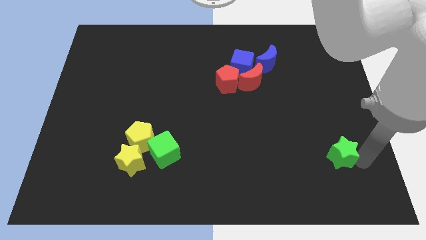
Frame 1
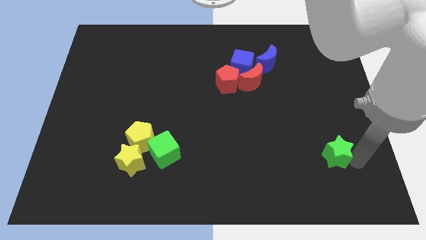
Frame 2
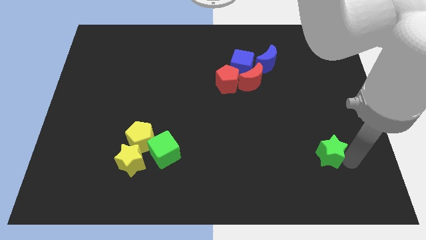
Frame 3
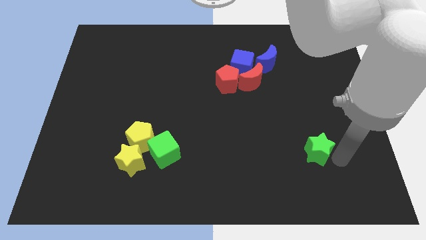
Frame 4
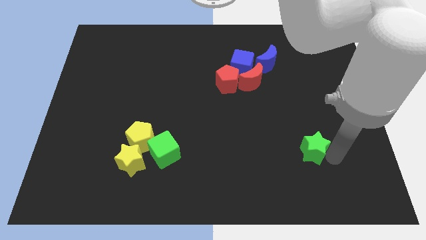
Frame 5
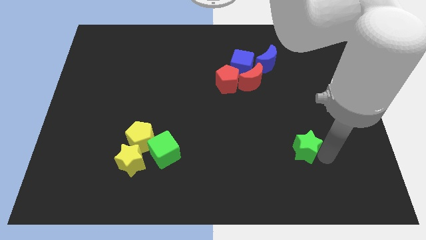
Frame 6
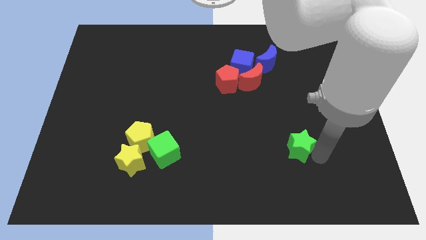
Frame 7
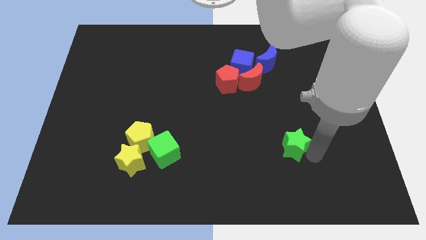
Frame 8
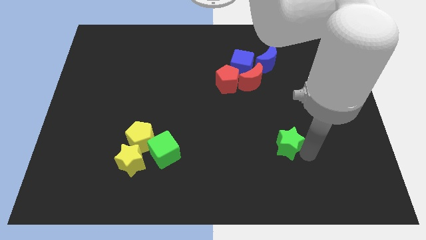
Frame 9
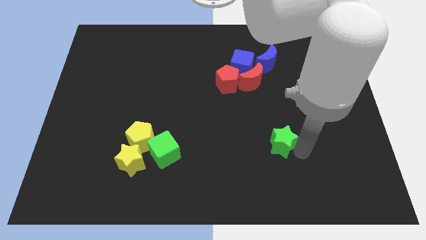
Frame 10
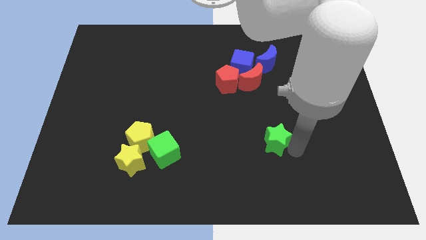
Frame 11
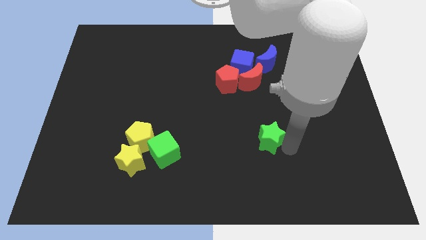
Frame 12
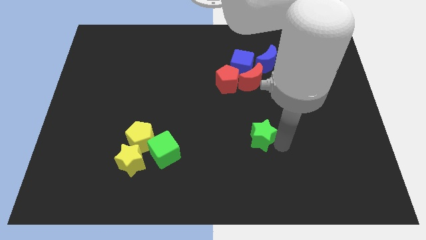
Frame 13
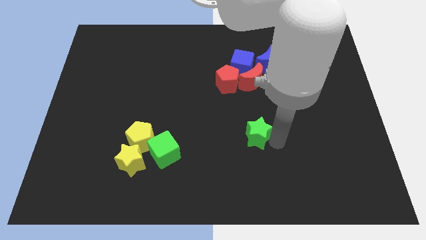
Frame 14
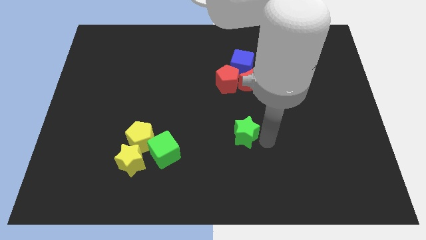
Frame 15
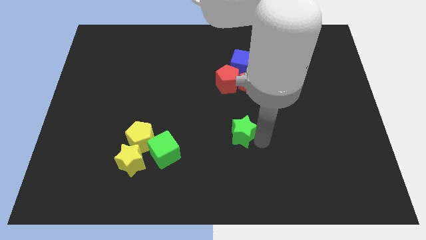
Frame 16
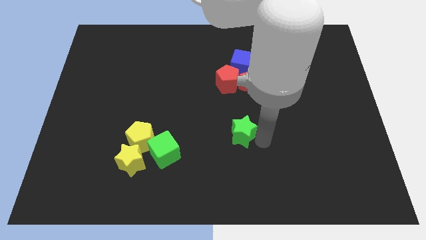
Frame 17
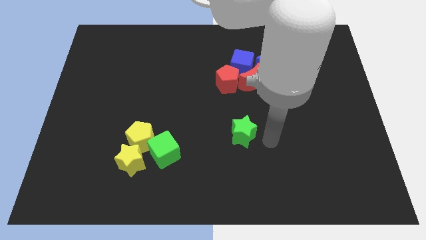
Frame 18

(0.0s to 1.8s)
move green star to the middle of the board

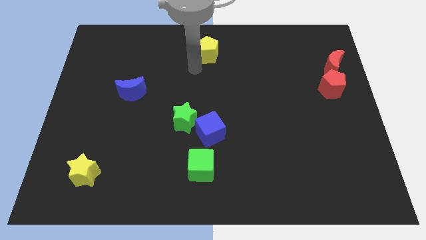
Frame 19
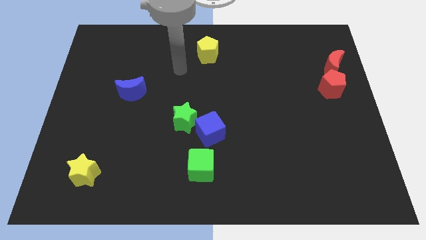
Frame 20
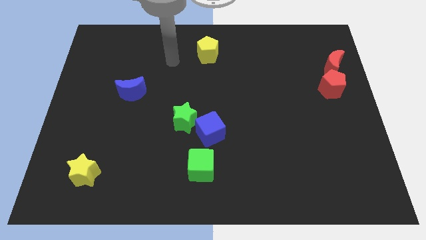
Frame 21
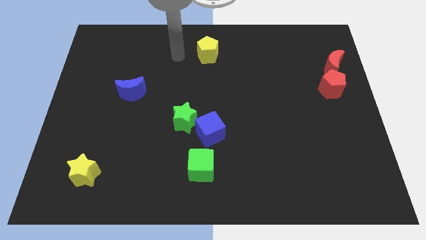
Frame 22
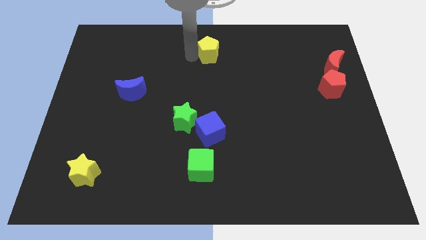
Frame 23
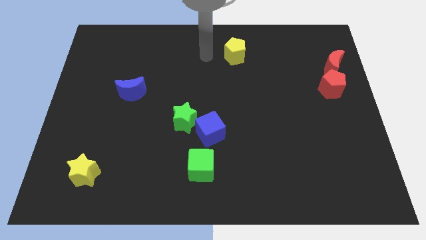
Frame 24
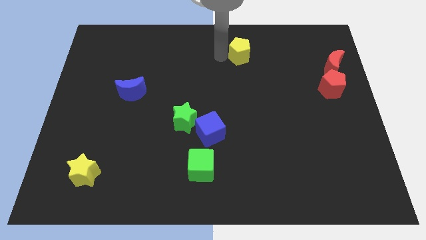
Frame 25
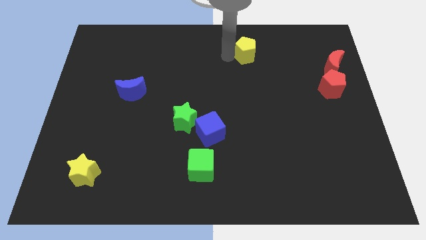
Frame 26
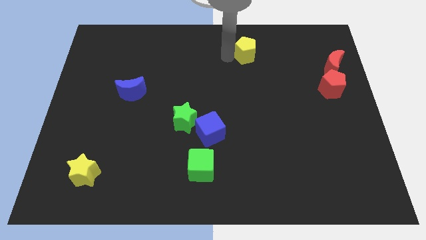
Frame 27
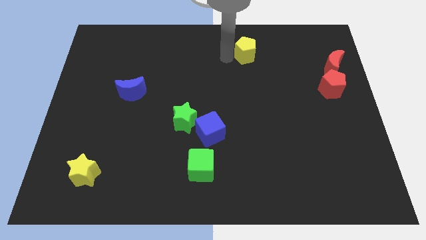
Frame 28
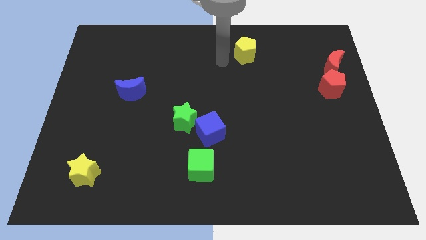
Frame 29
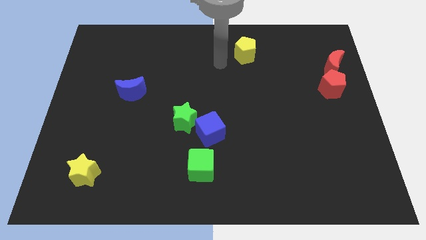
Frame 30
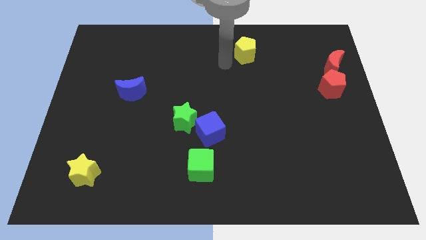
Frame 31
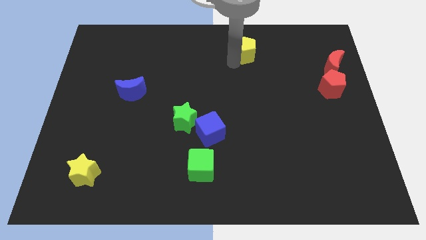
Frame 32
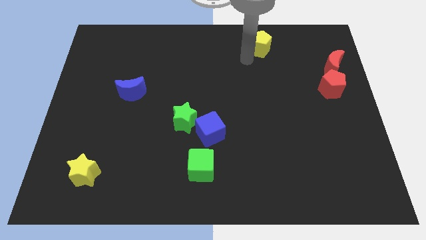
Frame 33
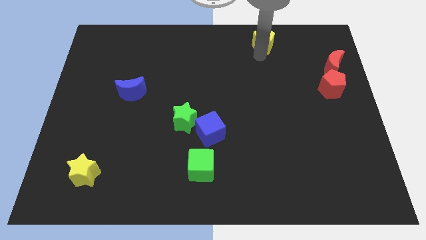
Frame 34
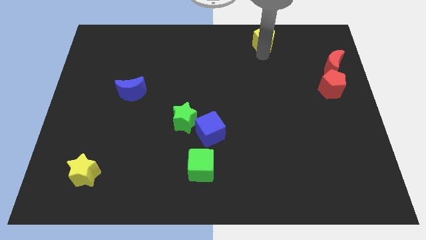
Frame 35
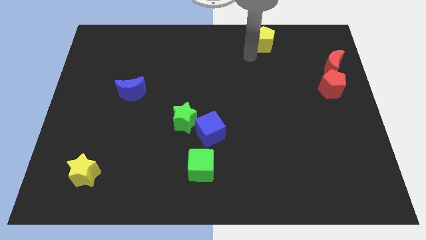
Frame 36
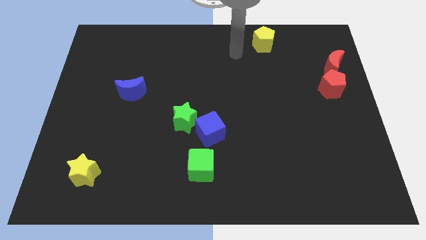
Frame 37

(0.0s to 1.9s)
drag yellow pentagon diagonally top right to the blue cube

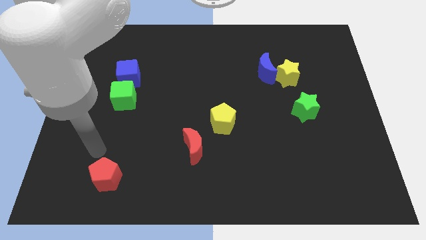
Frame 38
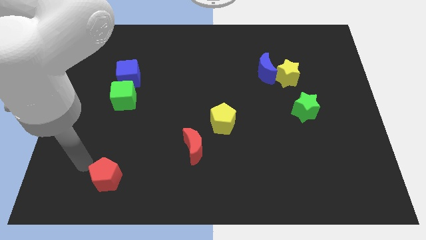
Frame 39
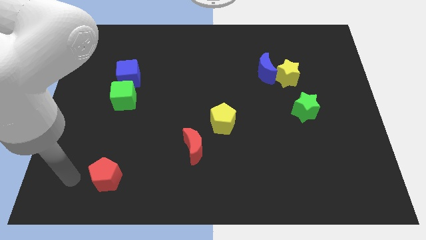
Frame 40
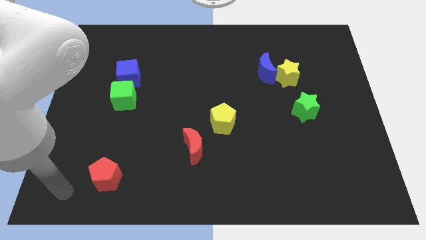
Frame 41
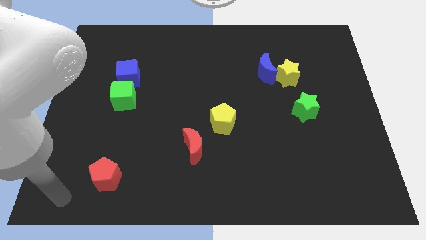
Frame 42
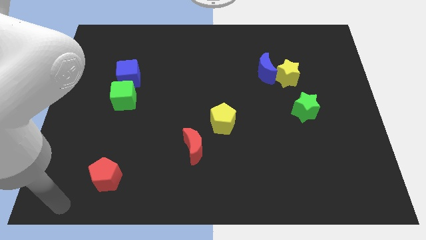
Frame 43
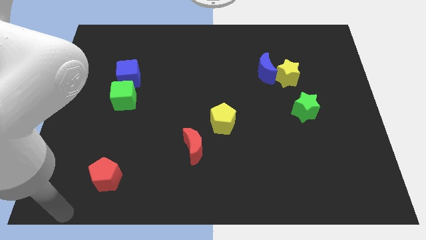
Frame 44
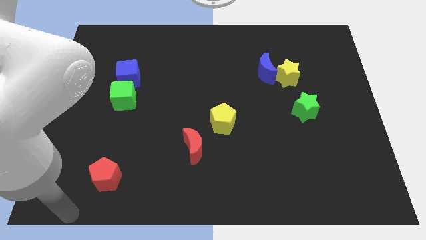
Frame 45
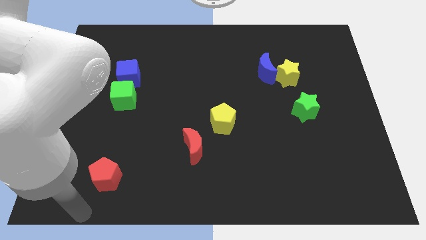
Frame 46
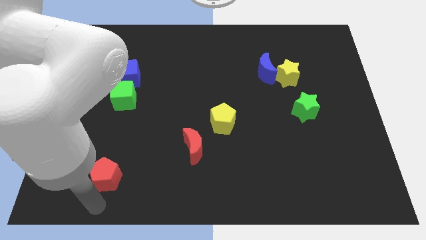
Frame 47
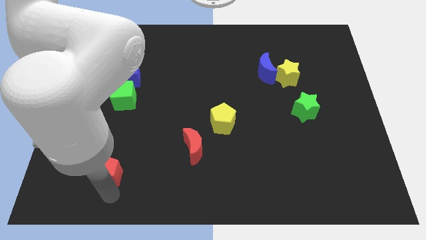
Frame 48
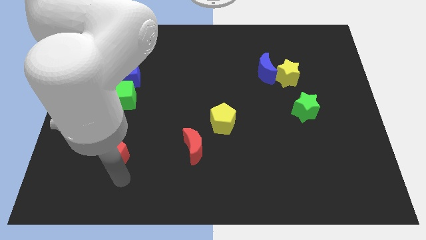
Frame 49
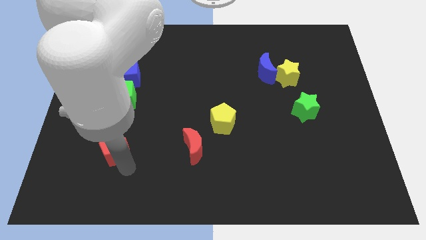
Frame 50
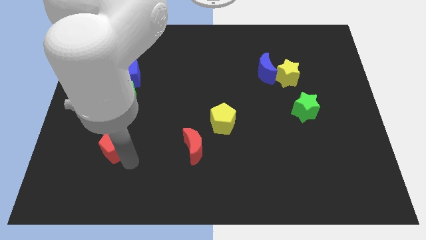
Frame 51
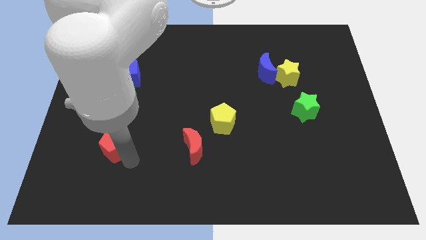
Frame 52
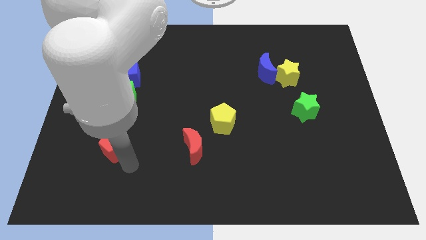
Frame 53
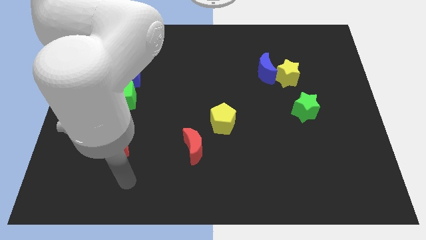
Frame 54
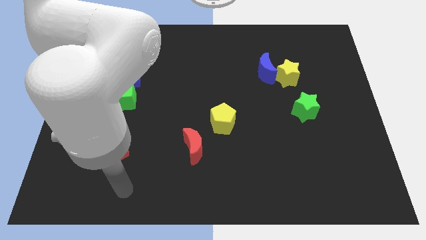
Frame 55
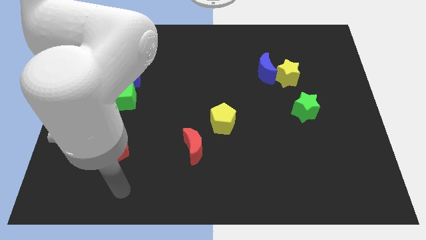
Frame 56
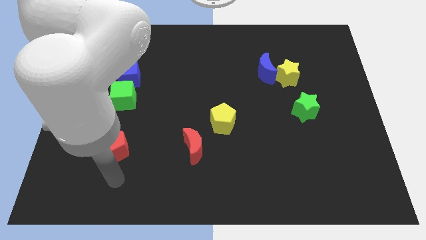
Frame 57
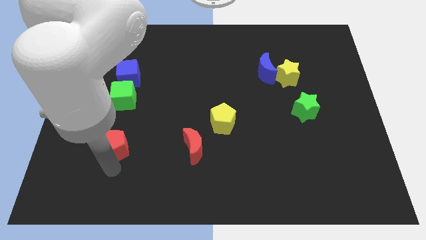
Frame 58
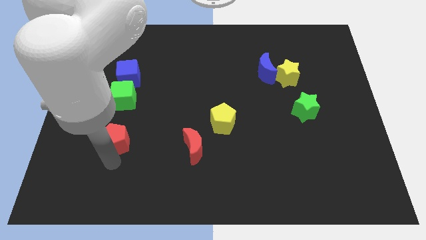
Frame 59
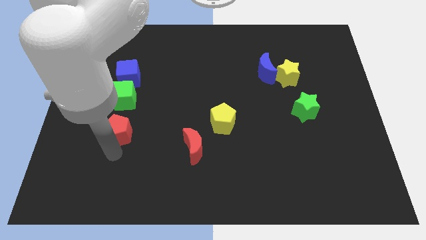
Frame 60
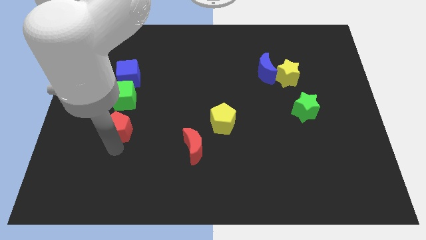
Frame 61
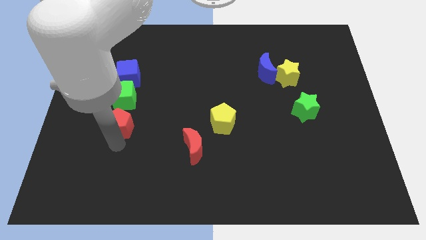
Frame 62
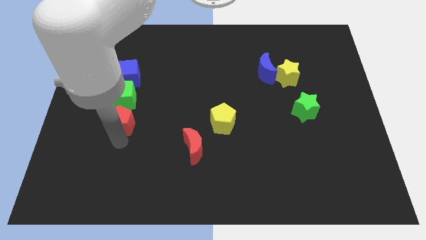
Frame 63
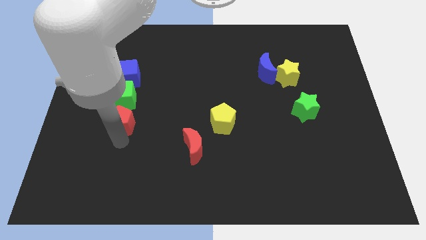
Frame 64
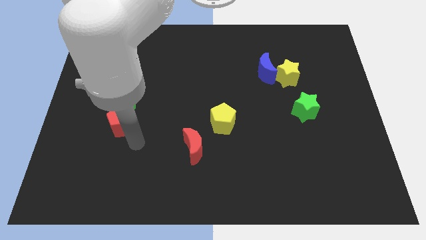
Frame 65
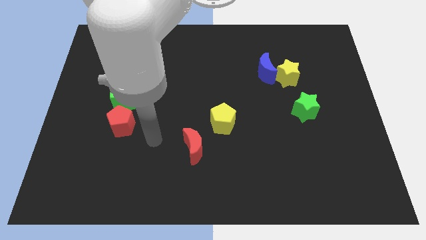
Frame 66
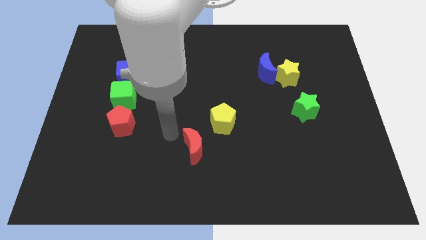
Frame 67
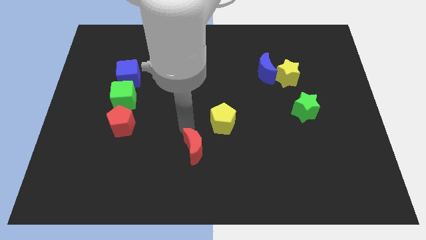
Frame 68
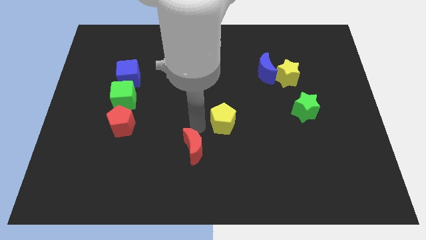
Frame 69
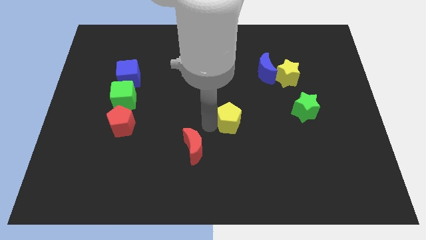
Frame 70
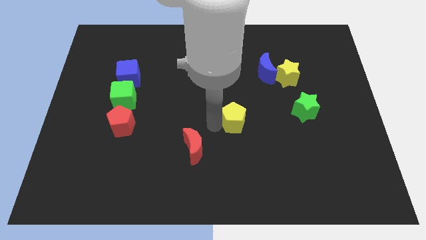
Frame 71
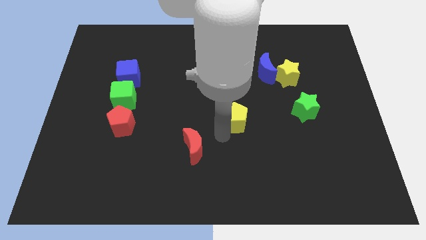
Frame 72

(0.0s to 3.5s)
move the red pentagon below the green cube

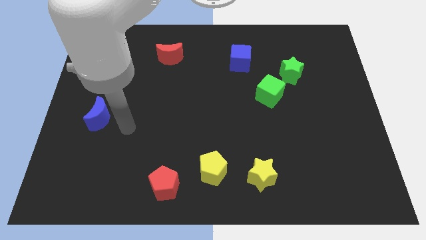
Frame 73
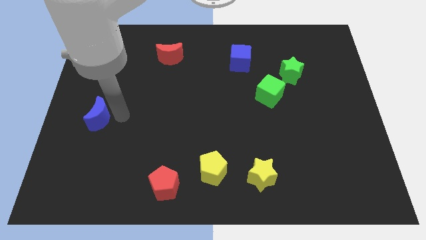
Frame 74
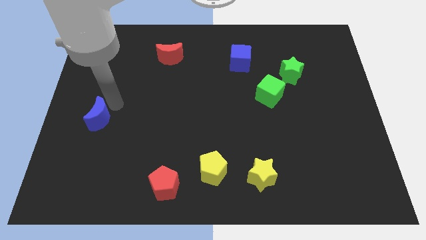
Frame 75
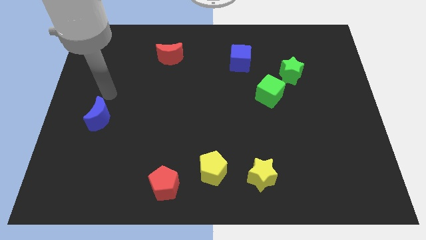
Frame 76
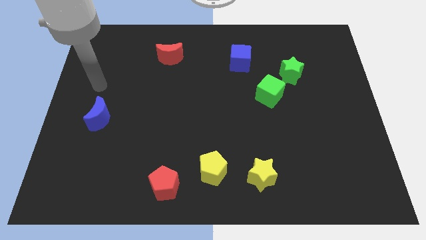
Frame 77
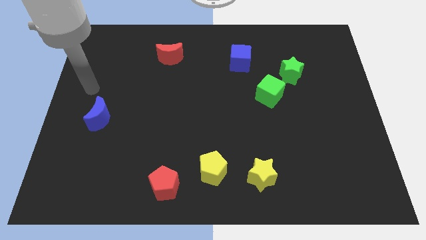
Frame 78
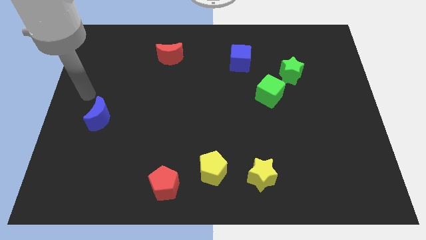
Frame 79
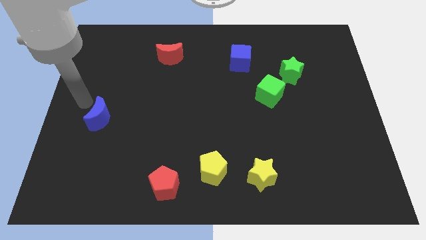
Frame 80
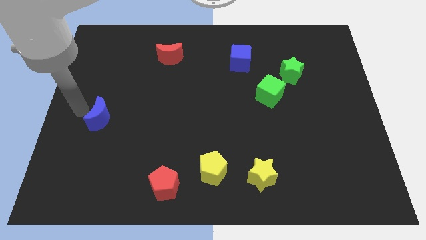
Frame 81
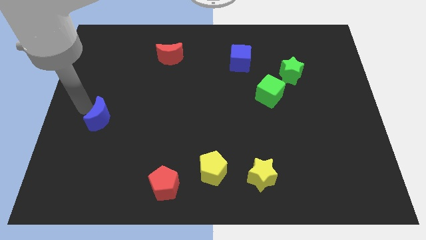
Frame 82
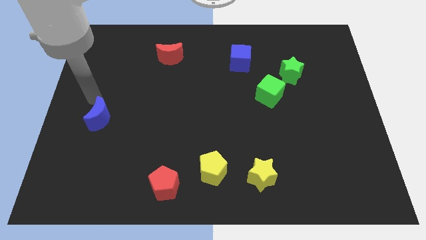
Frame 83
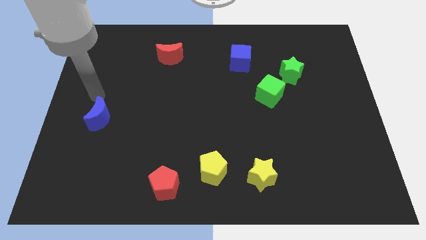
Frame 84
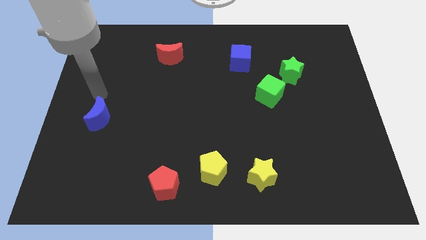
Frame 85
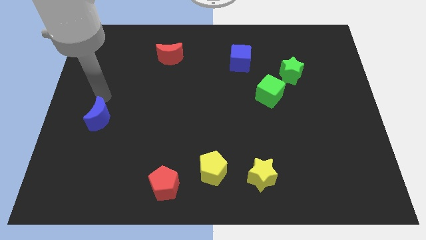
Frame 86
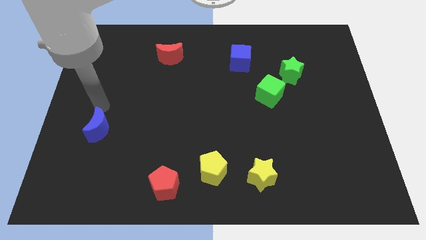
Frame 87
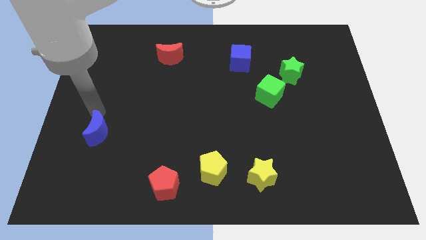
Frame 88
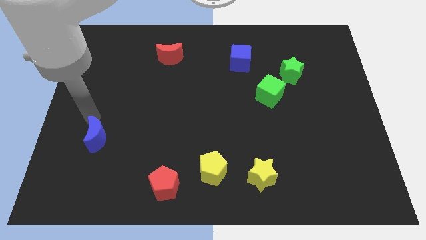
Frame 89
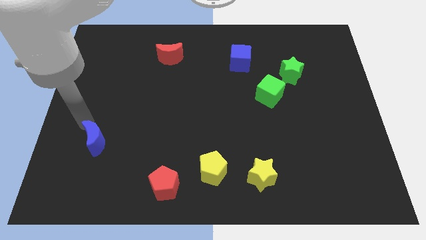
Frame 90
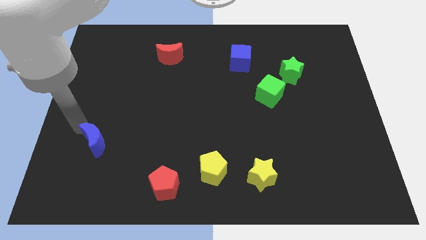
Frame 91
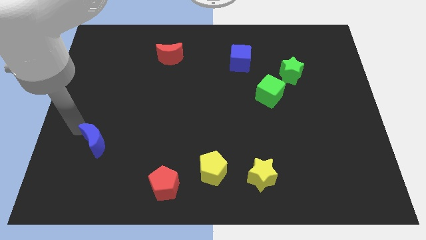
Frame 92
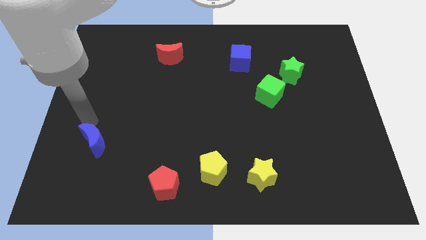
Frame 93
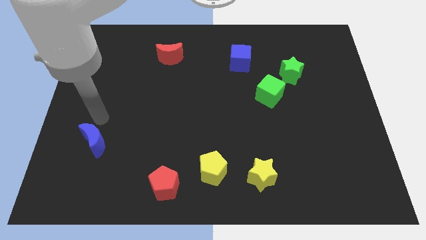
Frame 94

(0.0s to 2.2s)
slightly move down the blue moon
